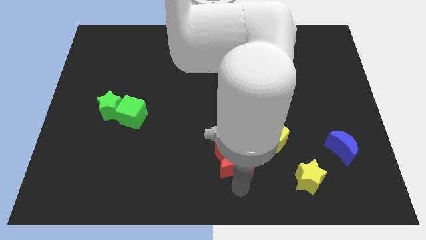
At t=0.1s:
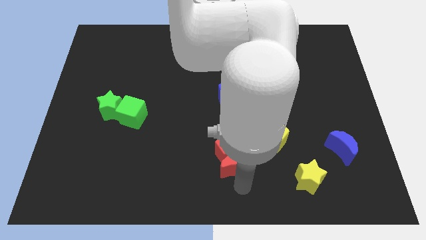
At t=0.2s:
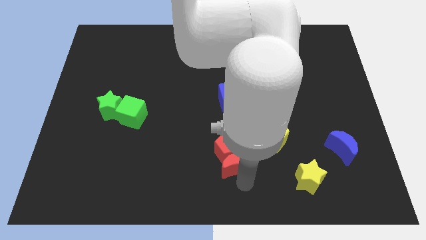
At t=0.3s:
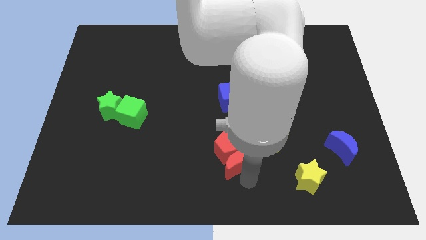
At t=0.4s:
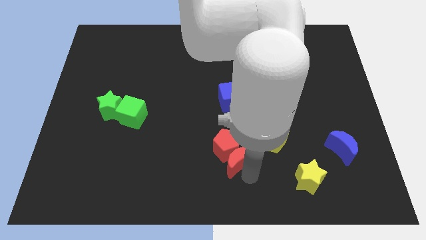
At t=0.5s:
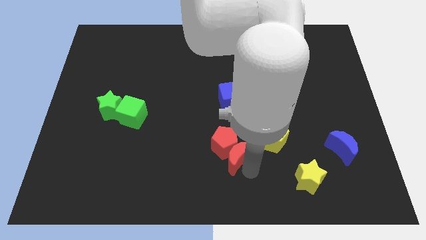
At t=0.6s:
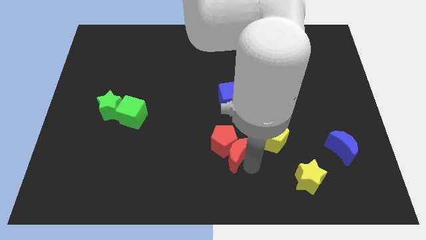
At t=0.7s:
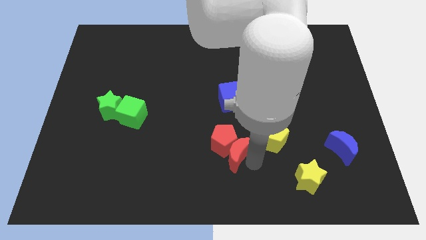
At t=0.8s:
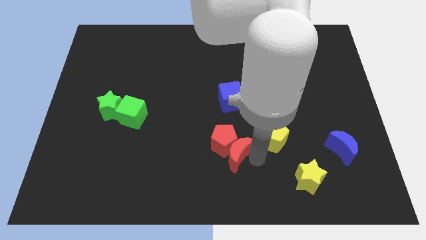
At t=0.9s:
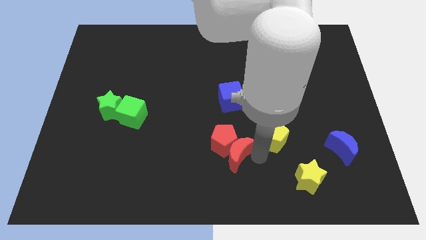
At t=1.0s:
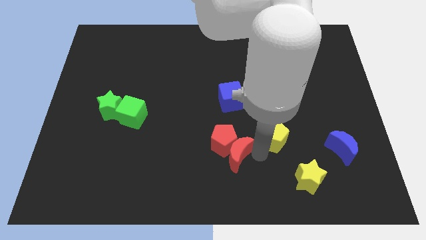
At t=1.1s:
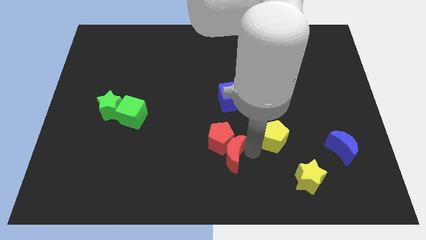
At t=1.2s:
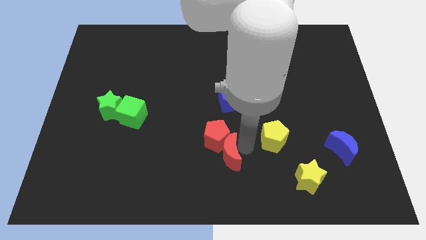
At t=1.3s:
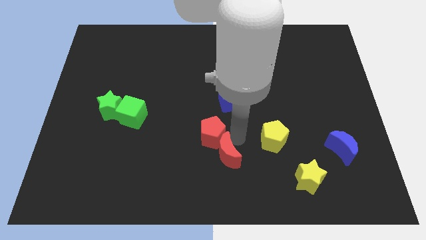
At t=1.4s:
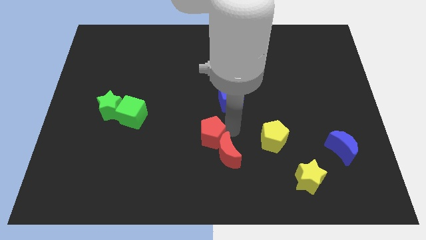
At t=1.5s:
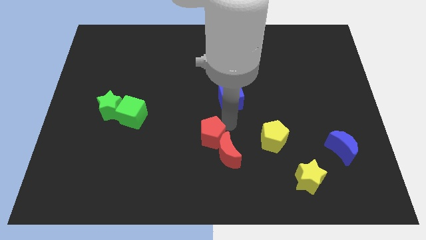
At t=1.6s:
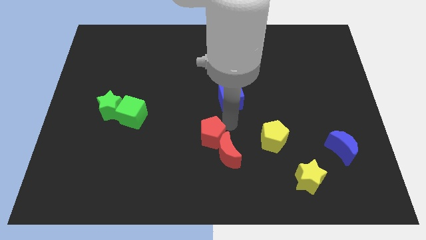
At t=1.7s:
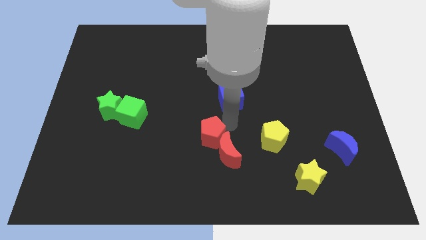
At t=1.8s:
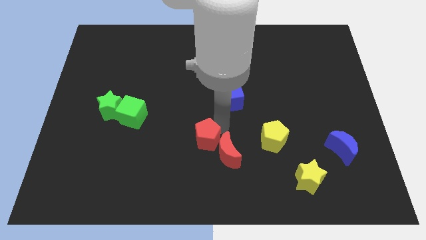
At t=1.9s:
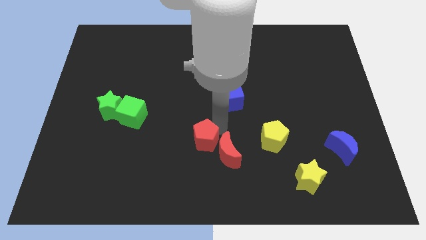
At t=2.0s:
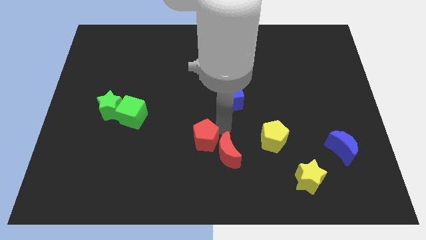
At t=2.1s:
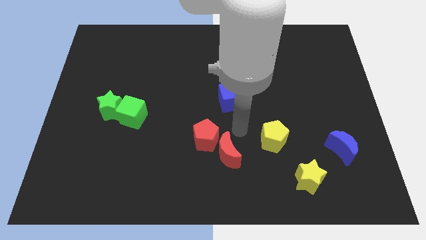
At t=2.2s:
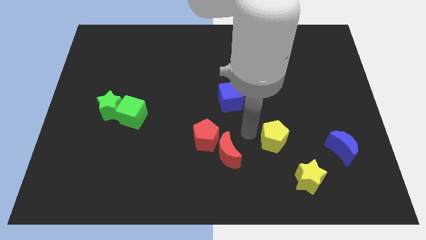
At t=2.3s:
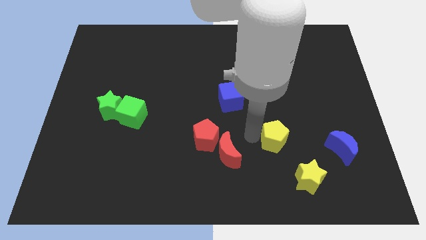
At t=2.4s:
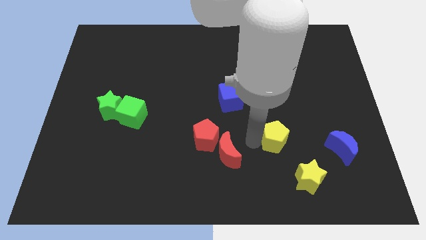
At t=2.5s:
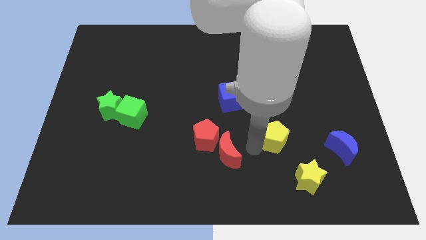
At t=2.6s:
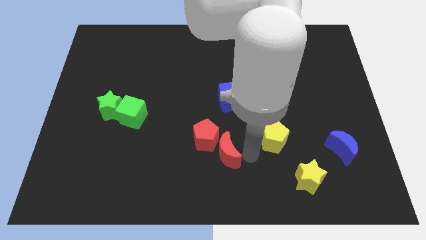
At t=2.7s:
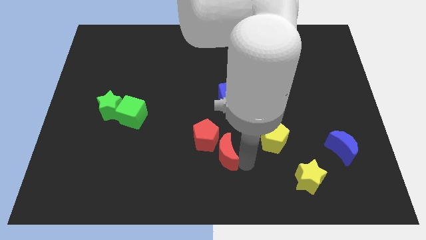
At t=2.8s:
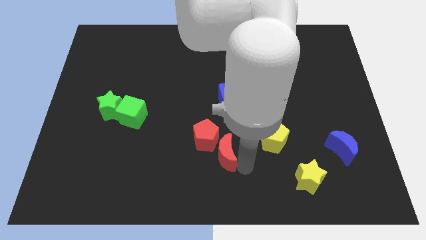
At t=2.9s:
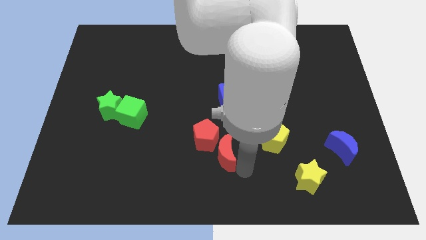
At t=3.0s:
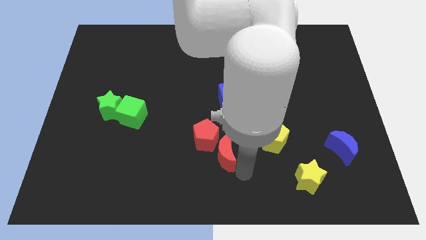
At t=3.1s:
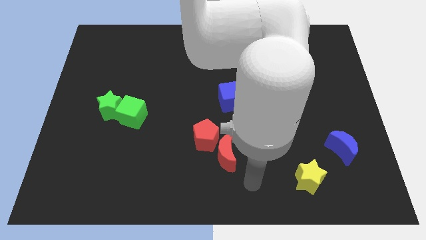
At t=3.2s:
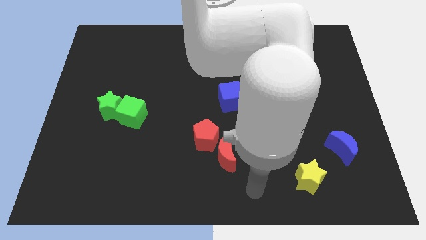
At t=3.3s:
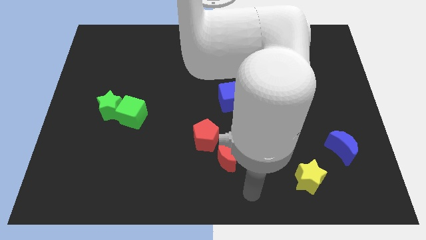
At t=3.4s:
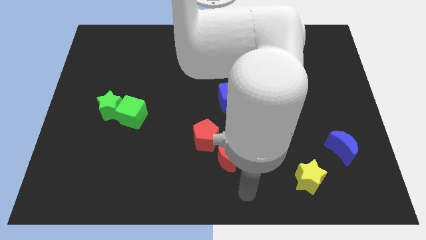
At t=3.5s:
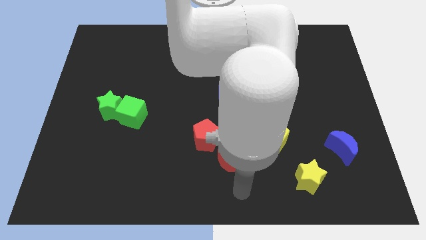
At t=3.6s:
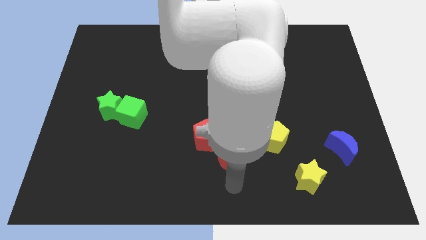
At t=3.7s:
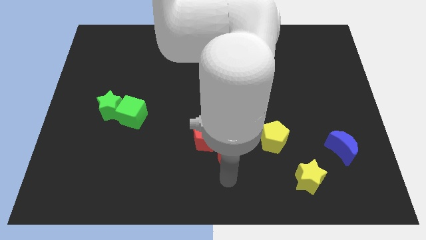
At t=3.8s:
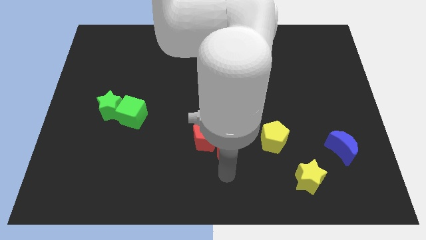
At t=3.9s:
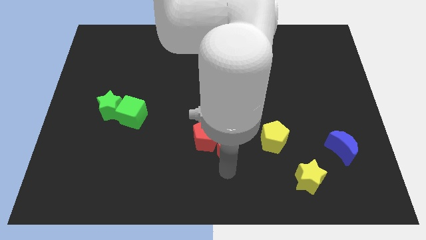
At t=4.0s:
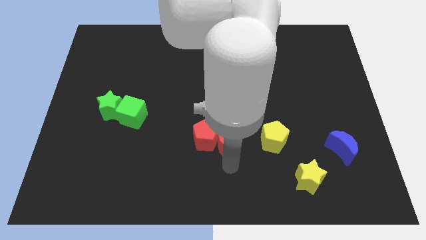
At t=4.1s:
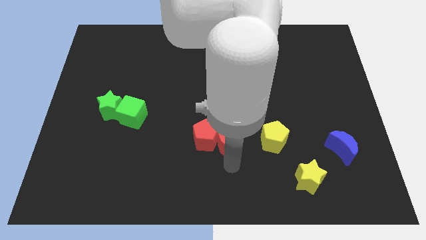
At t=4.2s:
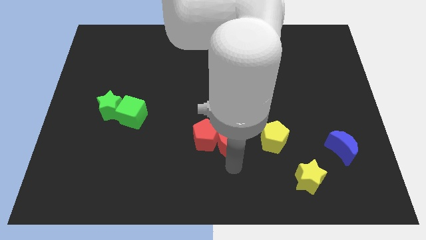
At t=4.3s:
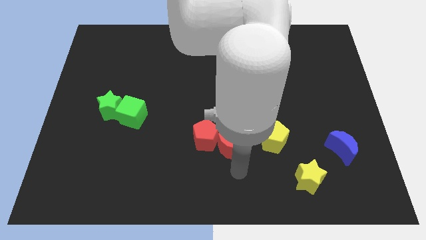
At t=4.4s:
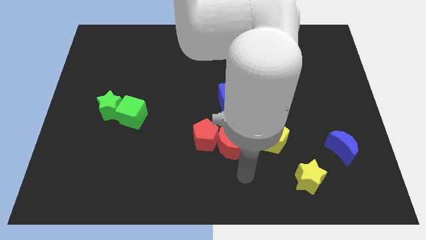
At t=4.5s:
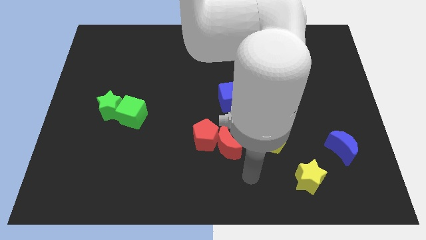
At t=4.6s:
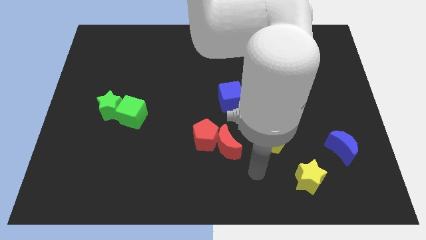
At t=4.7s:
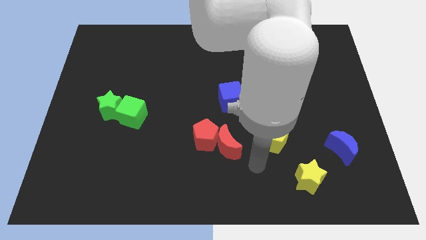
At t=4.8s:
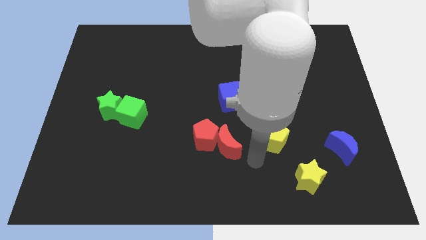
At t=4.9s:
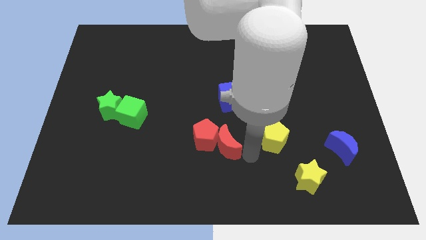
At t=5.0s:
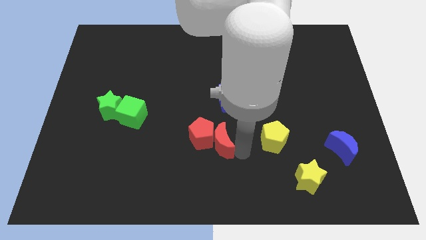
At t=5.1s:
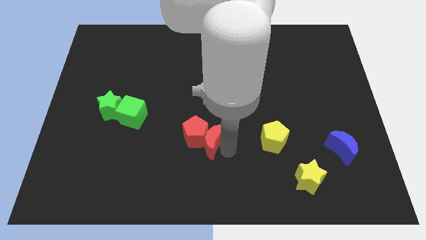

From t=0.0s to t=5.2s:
push the red blocks towards the green blocks

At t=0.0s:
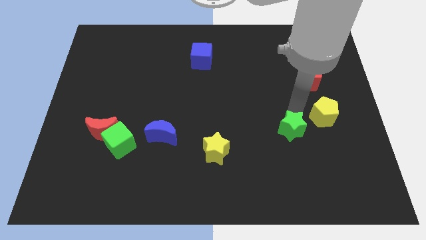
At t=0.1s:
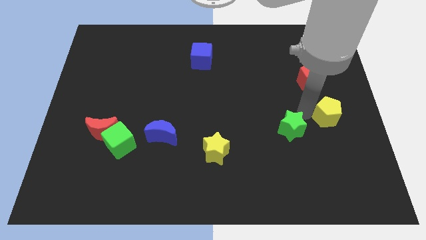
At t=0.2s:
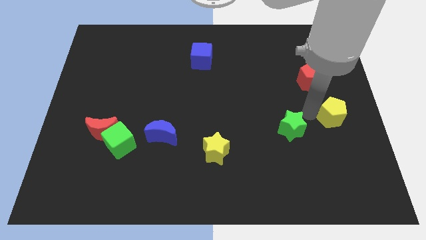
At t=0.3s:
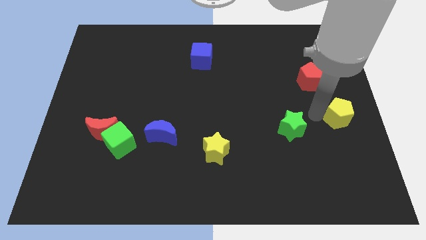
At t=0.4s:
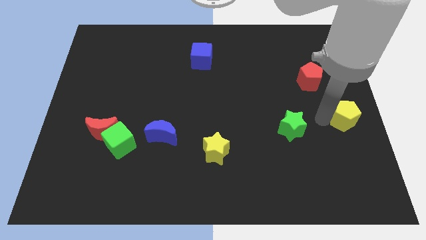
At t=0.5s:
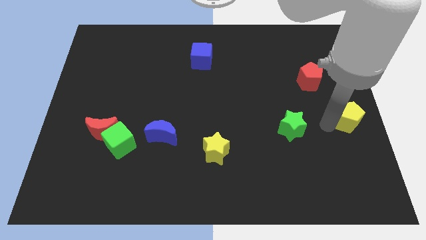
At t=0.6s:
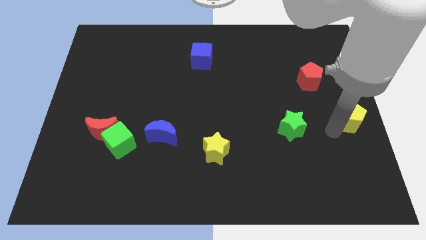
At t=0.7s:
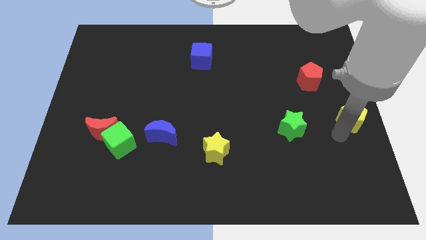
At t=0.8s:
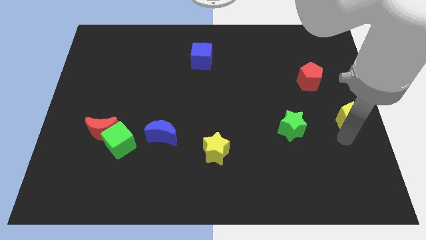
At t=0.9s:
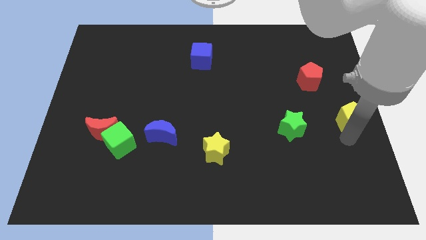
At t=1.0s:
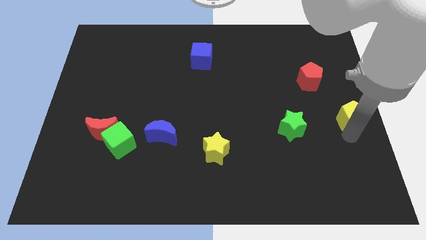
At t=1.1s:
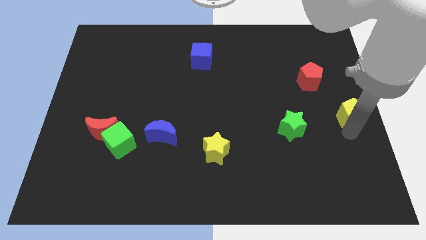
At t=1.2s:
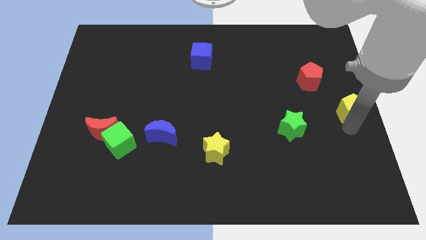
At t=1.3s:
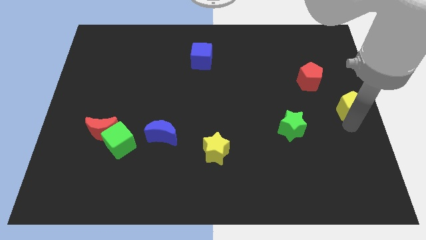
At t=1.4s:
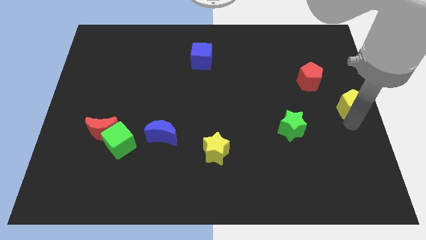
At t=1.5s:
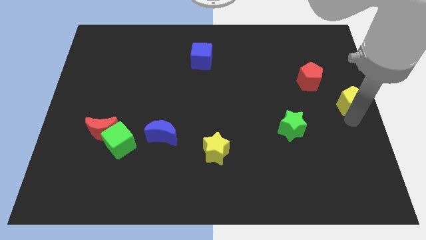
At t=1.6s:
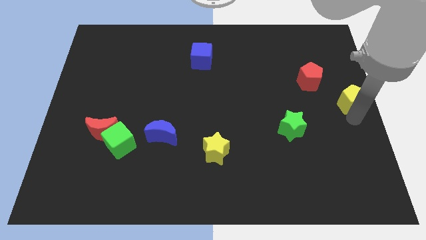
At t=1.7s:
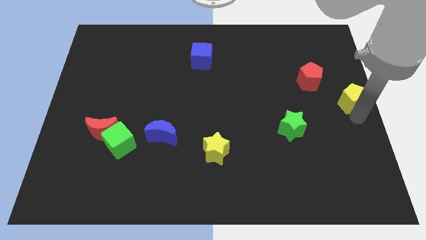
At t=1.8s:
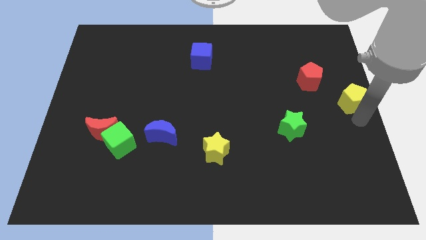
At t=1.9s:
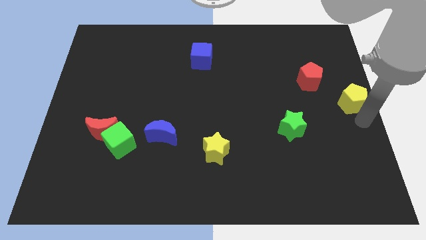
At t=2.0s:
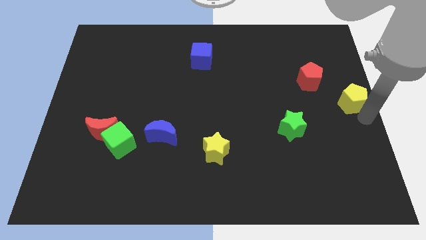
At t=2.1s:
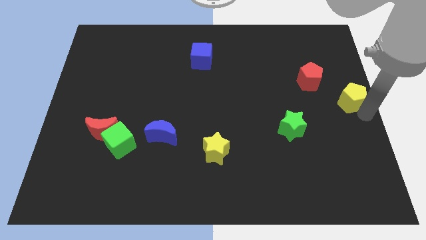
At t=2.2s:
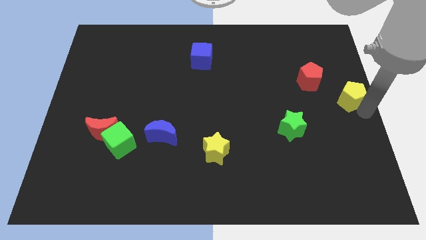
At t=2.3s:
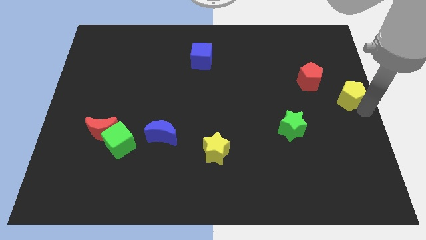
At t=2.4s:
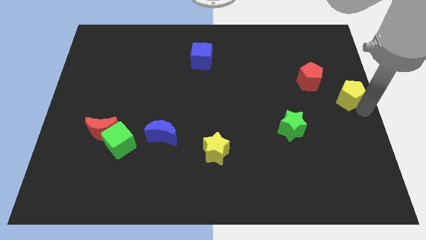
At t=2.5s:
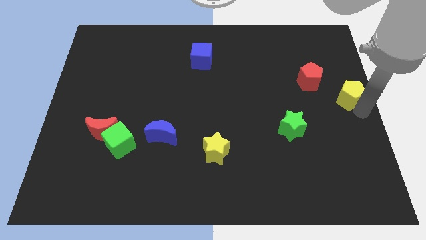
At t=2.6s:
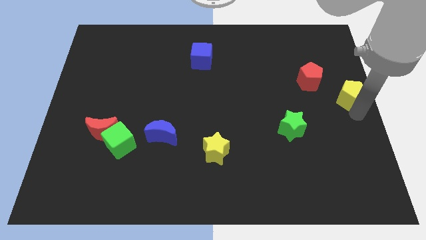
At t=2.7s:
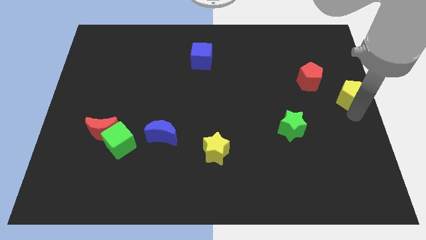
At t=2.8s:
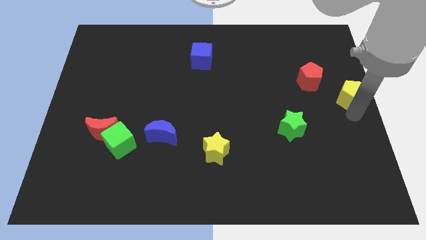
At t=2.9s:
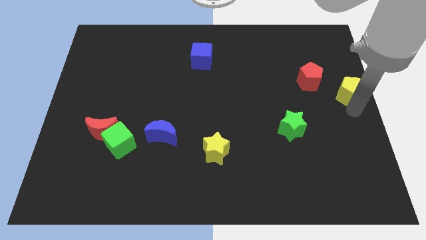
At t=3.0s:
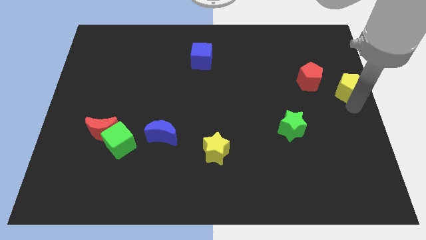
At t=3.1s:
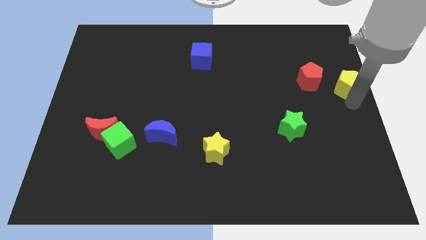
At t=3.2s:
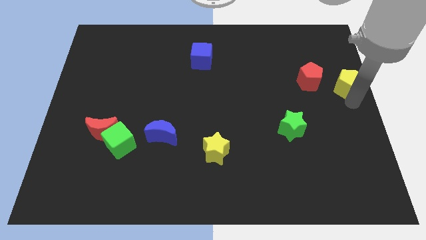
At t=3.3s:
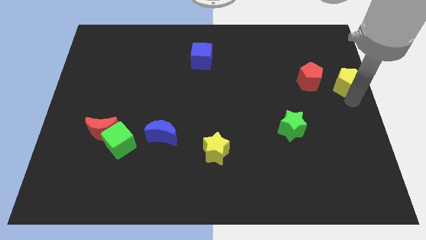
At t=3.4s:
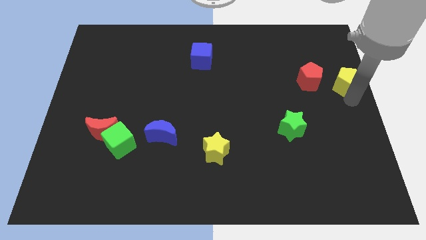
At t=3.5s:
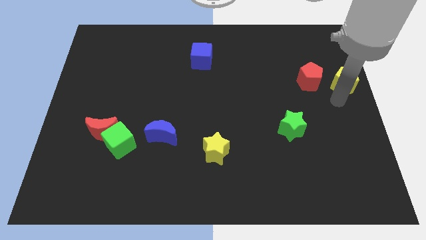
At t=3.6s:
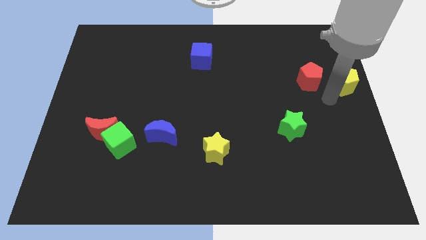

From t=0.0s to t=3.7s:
push the yellow pentagon to the right of the red pentagon
